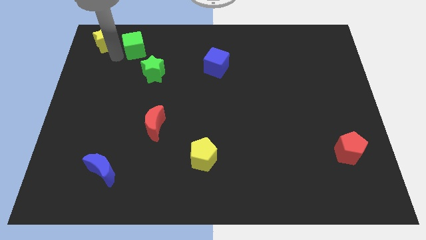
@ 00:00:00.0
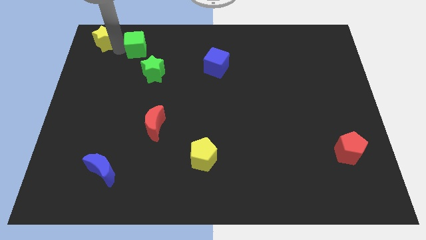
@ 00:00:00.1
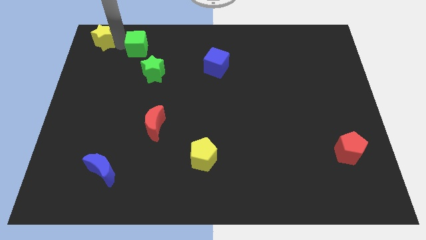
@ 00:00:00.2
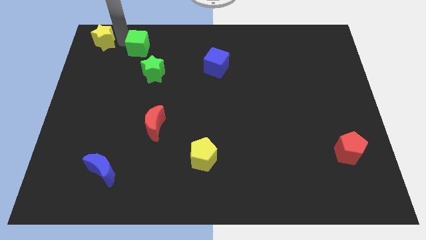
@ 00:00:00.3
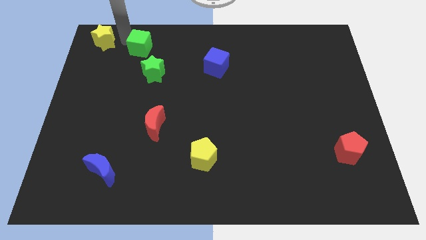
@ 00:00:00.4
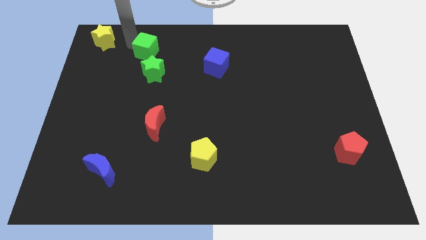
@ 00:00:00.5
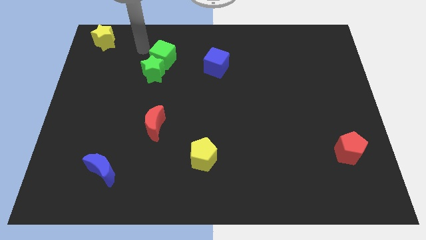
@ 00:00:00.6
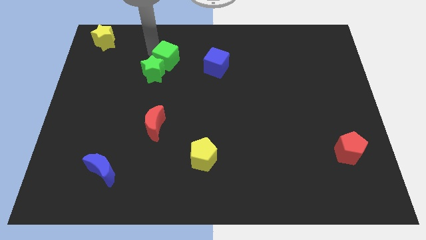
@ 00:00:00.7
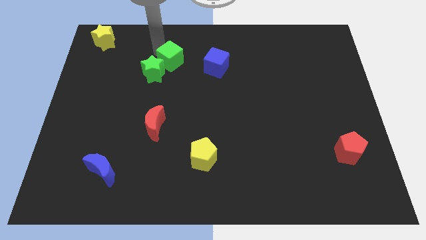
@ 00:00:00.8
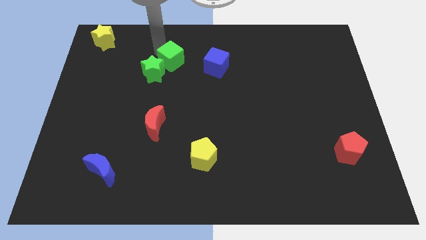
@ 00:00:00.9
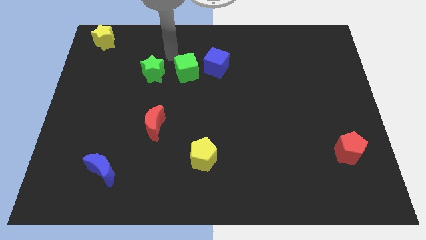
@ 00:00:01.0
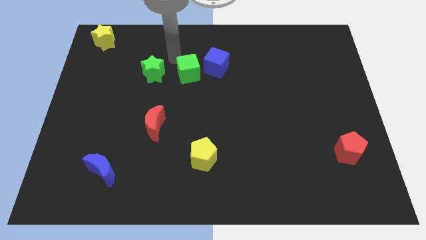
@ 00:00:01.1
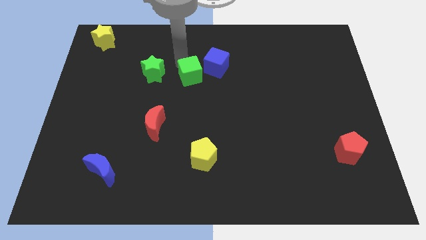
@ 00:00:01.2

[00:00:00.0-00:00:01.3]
place green cube to the right of green star

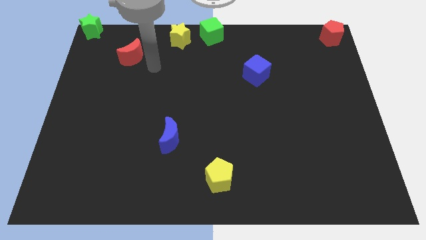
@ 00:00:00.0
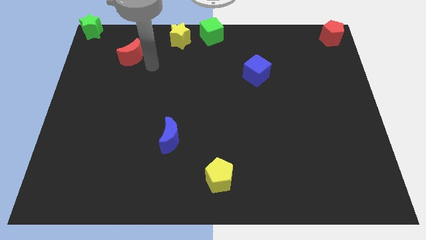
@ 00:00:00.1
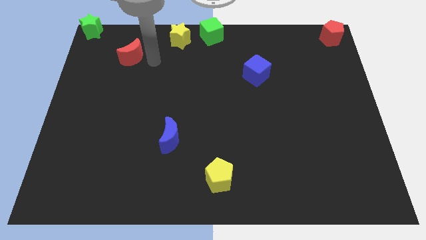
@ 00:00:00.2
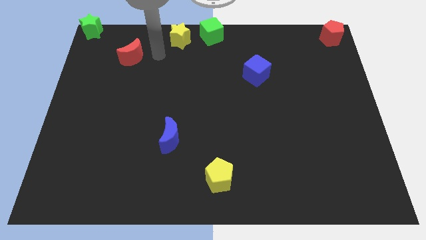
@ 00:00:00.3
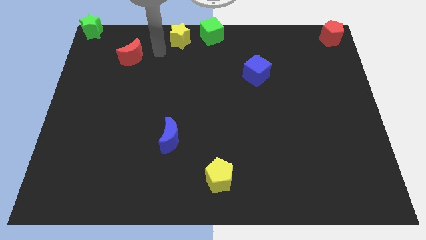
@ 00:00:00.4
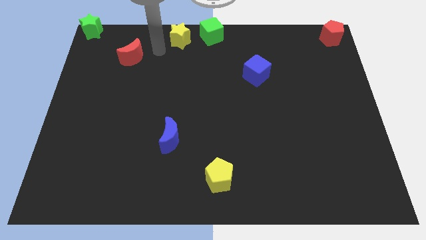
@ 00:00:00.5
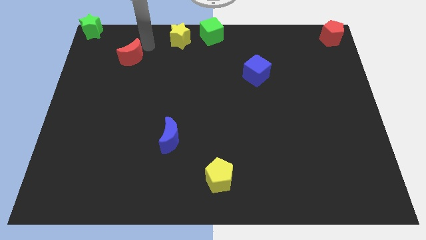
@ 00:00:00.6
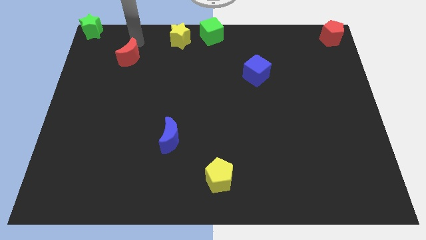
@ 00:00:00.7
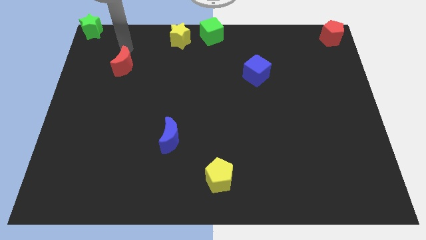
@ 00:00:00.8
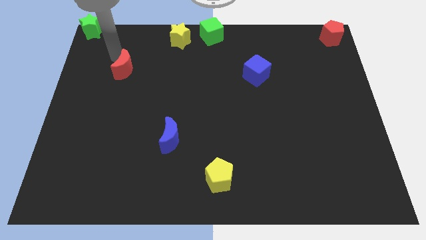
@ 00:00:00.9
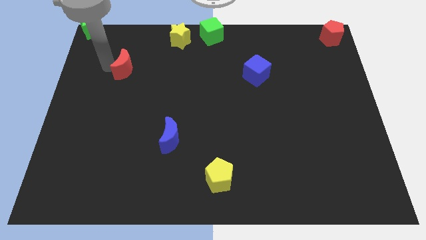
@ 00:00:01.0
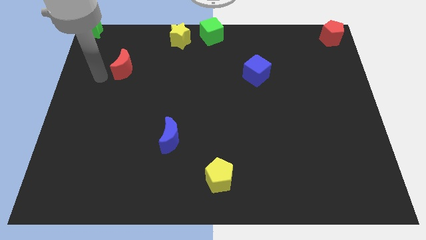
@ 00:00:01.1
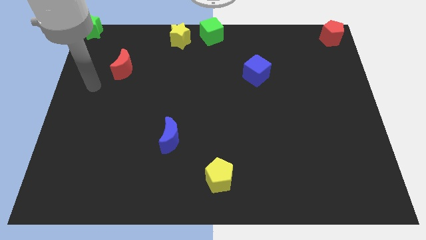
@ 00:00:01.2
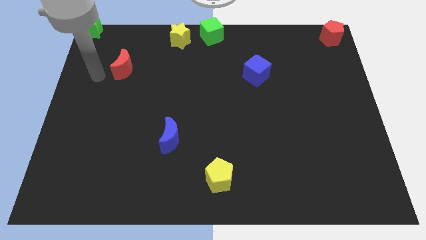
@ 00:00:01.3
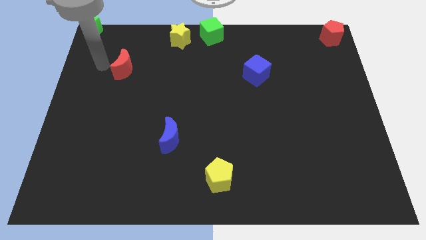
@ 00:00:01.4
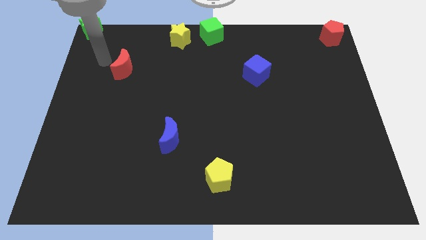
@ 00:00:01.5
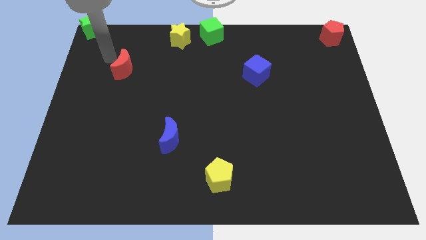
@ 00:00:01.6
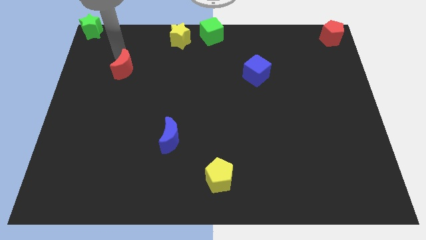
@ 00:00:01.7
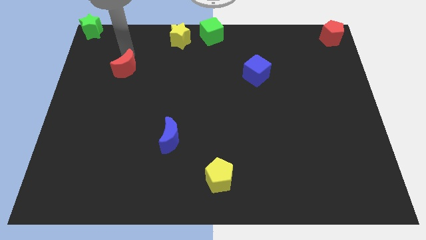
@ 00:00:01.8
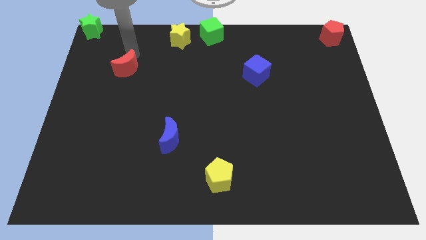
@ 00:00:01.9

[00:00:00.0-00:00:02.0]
move red moon slightly downwards

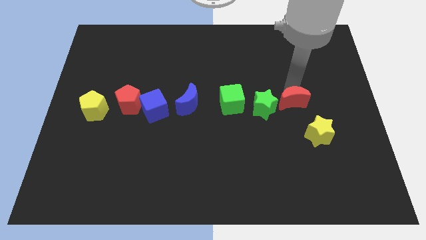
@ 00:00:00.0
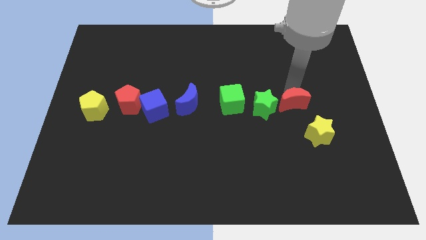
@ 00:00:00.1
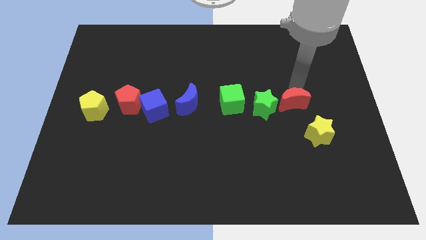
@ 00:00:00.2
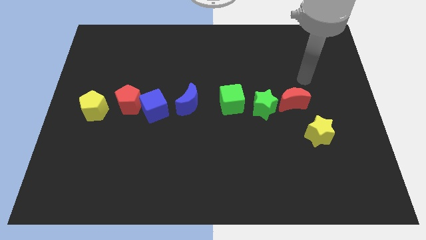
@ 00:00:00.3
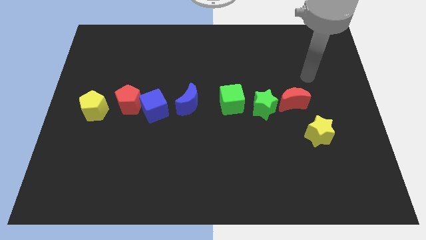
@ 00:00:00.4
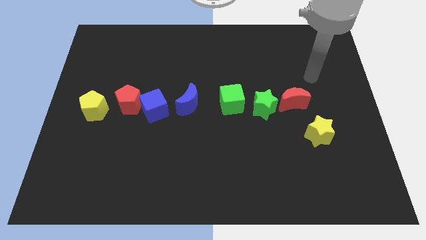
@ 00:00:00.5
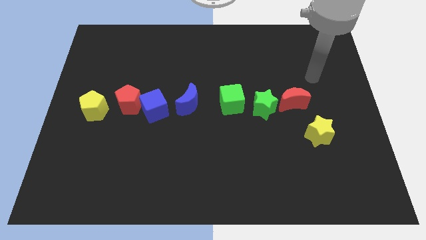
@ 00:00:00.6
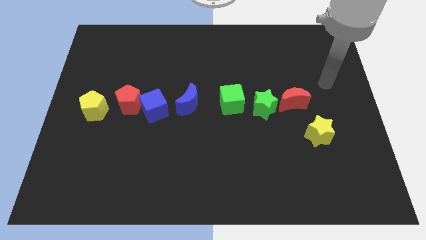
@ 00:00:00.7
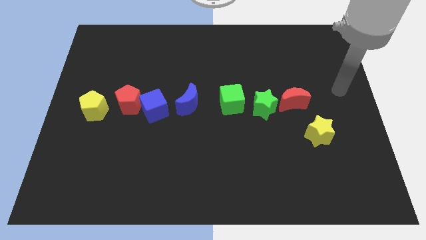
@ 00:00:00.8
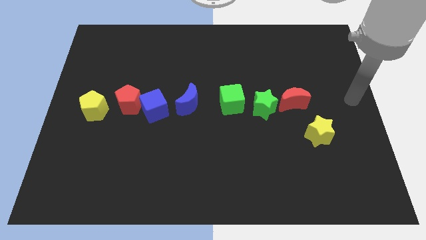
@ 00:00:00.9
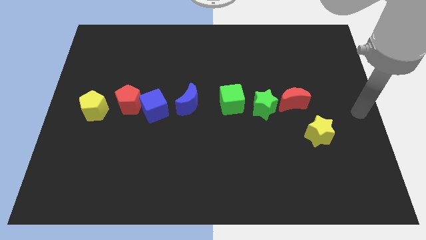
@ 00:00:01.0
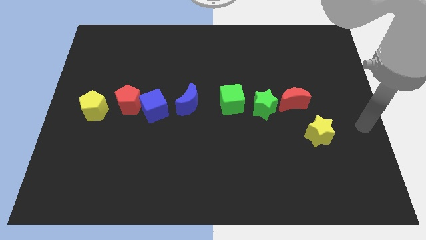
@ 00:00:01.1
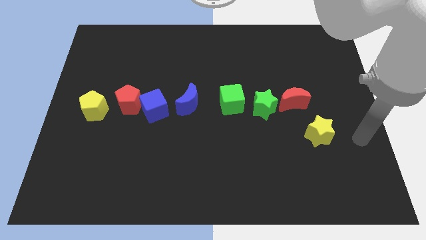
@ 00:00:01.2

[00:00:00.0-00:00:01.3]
move the arm away from the red moon

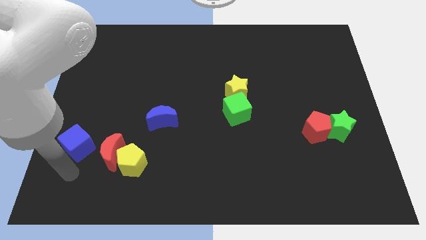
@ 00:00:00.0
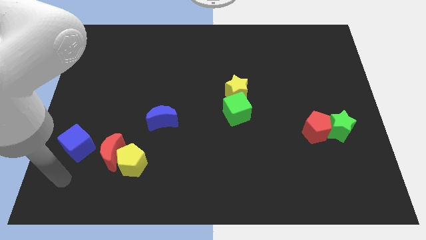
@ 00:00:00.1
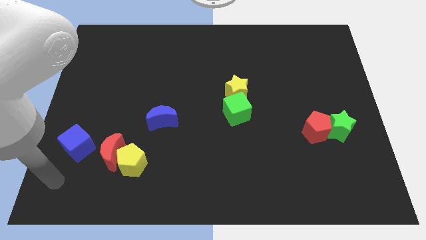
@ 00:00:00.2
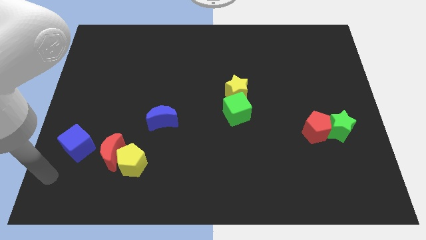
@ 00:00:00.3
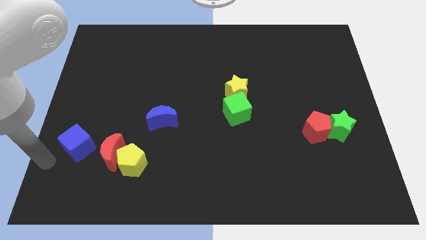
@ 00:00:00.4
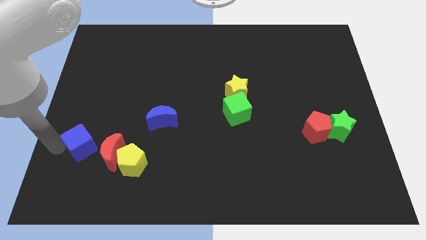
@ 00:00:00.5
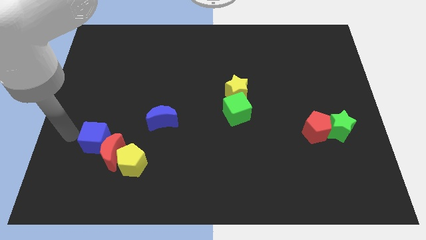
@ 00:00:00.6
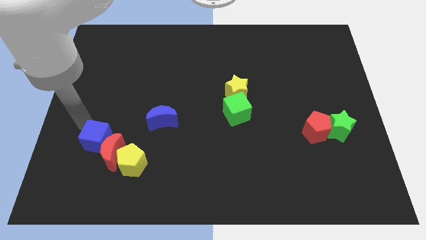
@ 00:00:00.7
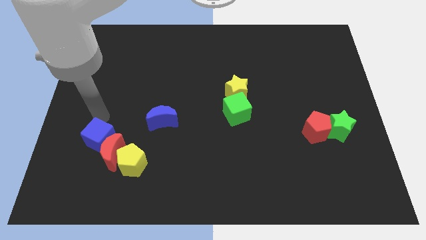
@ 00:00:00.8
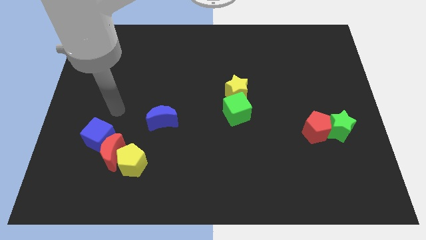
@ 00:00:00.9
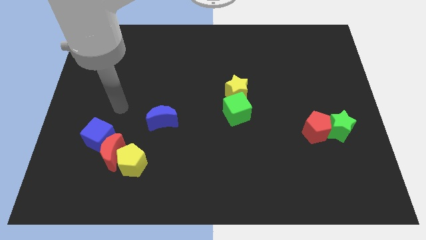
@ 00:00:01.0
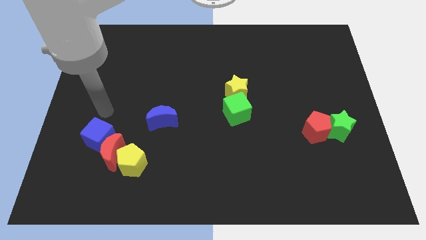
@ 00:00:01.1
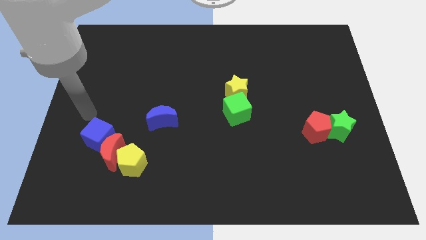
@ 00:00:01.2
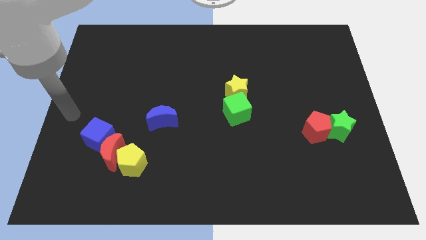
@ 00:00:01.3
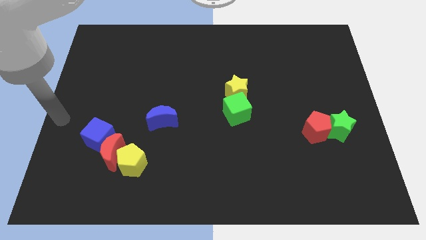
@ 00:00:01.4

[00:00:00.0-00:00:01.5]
push the blue cube into the red moon

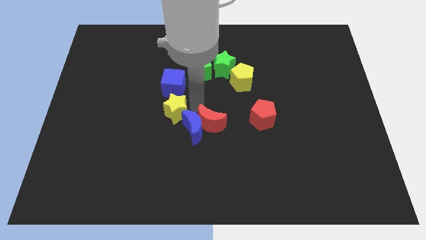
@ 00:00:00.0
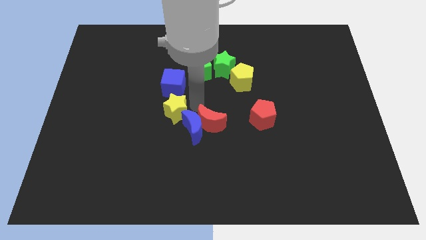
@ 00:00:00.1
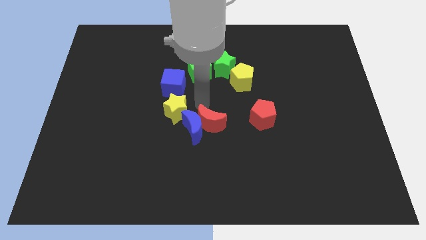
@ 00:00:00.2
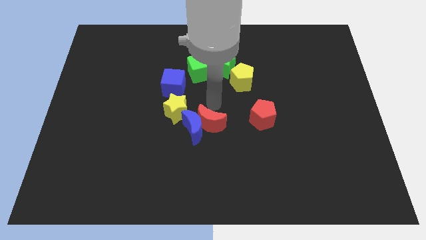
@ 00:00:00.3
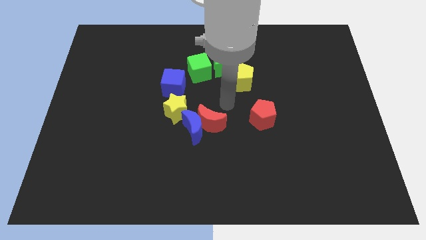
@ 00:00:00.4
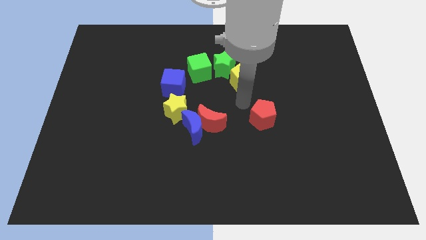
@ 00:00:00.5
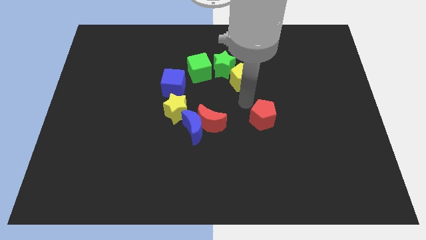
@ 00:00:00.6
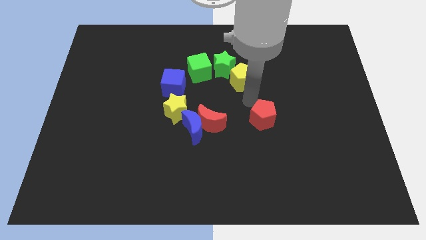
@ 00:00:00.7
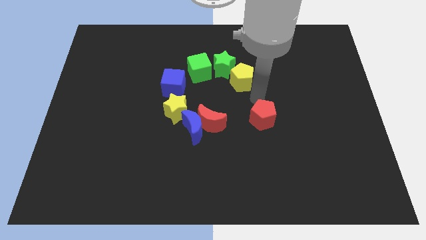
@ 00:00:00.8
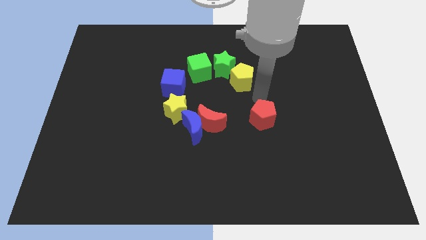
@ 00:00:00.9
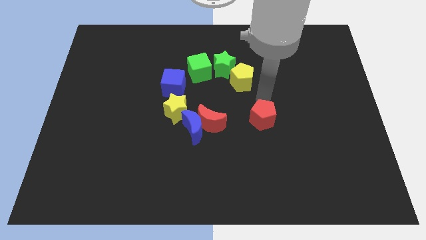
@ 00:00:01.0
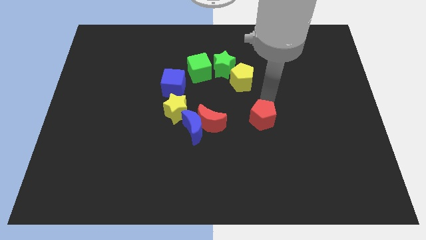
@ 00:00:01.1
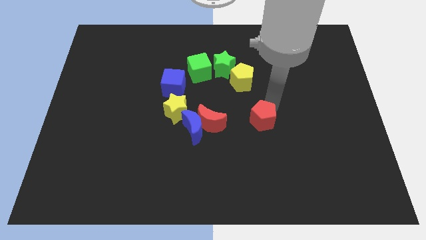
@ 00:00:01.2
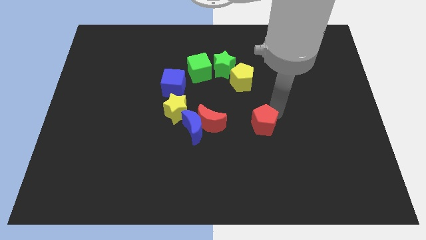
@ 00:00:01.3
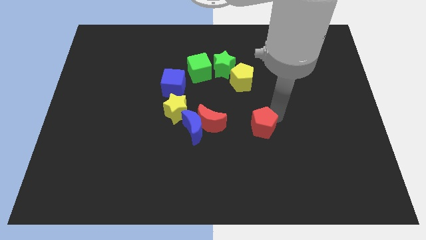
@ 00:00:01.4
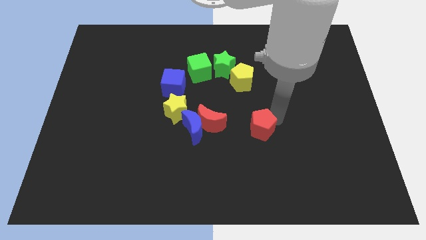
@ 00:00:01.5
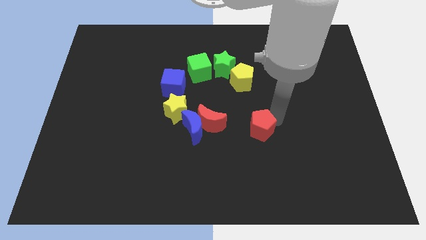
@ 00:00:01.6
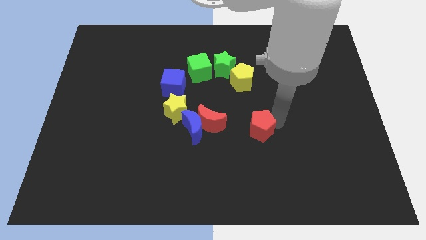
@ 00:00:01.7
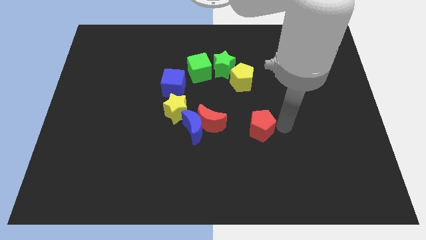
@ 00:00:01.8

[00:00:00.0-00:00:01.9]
move the red pentagon slightly to the bottom center of the board

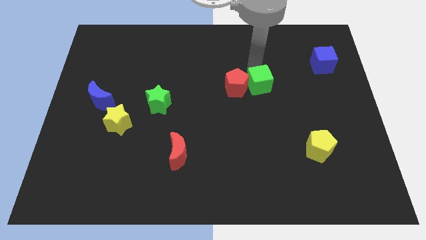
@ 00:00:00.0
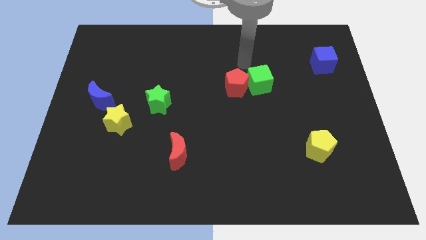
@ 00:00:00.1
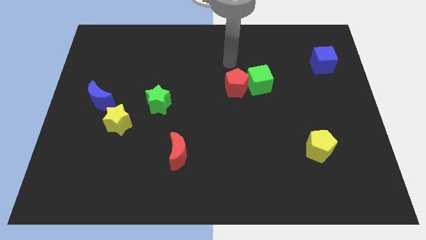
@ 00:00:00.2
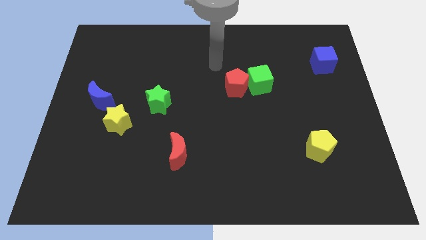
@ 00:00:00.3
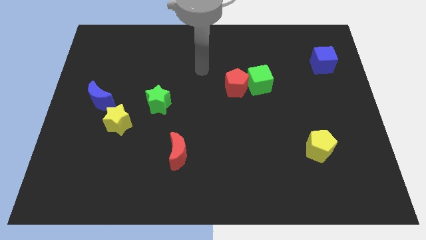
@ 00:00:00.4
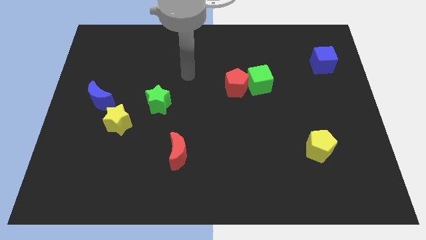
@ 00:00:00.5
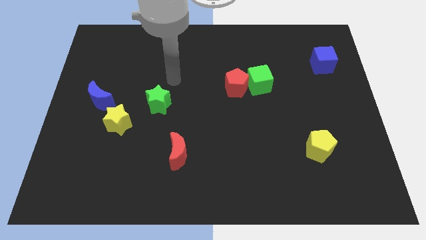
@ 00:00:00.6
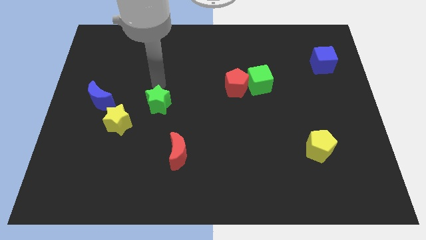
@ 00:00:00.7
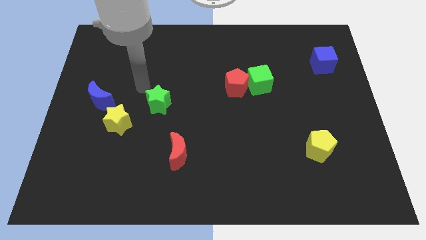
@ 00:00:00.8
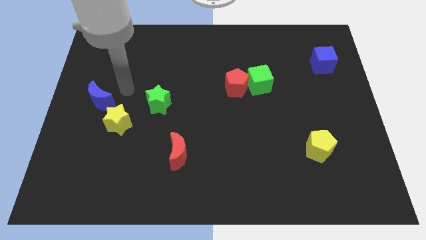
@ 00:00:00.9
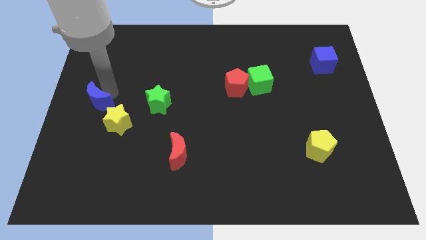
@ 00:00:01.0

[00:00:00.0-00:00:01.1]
move your arm close to the blue moon
